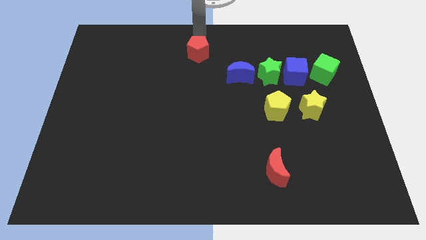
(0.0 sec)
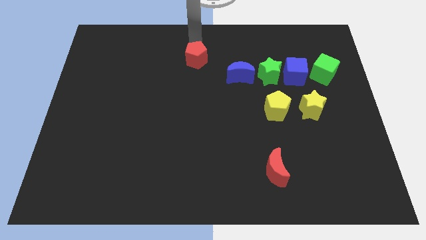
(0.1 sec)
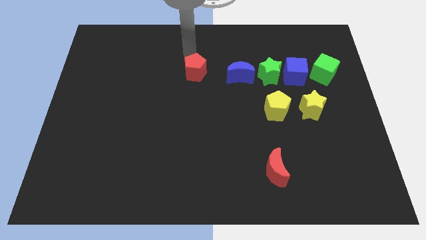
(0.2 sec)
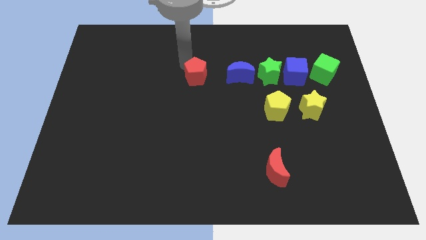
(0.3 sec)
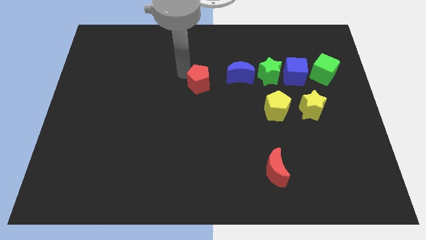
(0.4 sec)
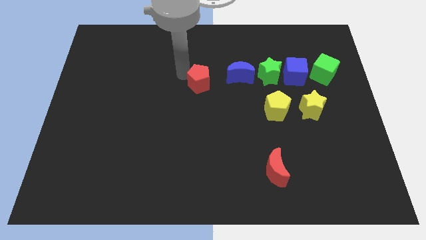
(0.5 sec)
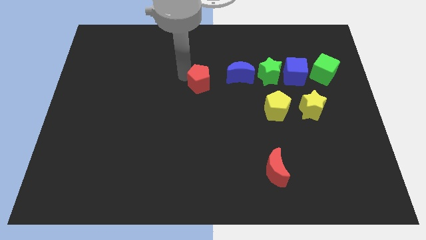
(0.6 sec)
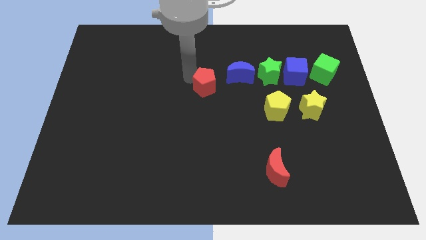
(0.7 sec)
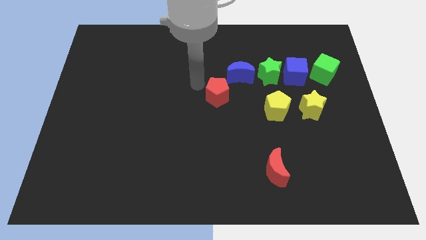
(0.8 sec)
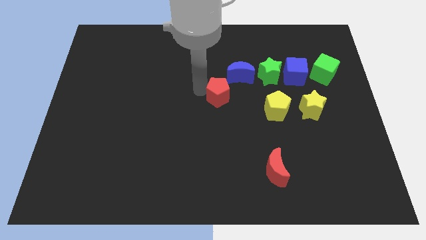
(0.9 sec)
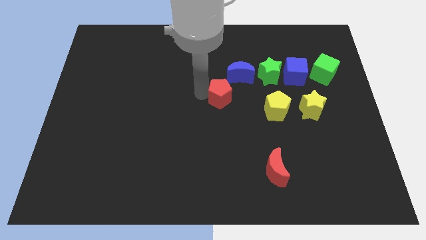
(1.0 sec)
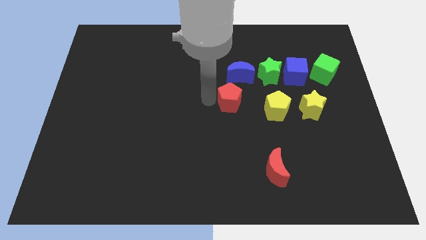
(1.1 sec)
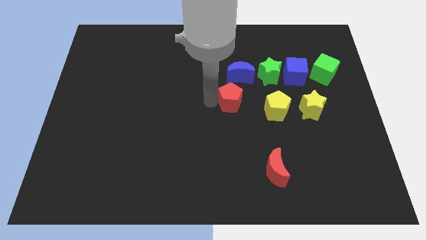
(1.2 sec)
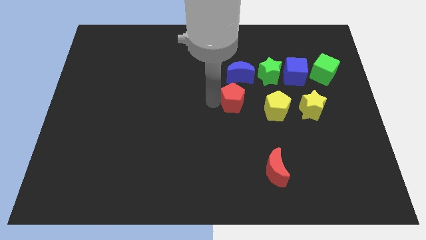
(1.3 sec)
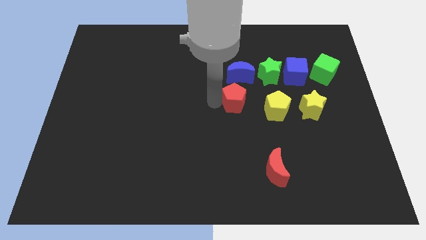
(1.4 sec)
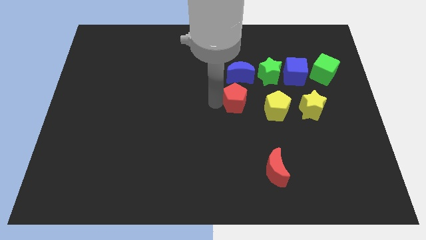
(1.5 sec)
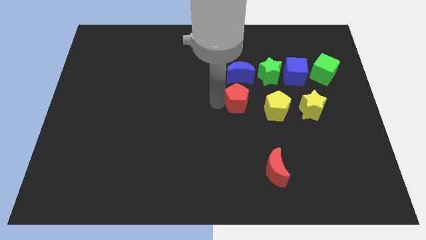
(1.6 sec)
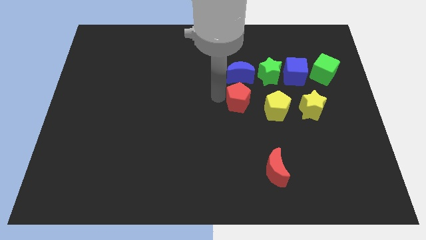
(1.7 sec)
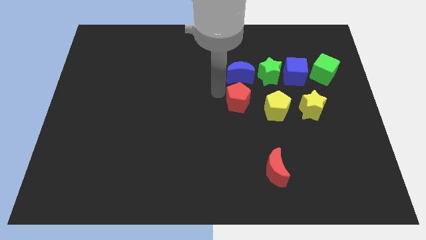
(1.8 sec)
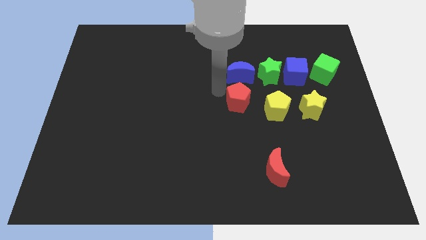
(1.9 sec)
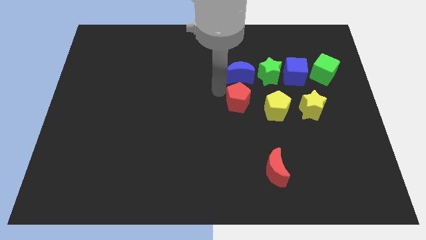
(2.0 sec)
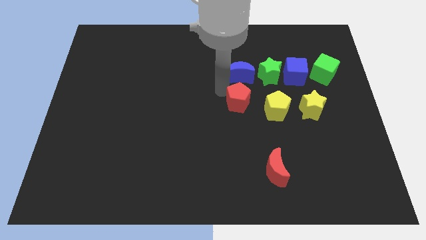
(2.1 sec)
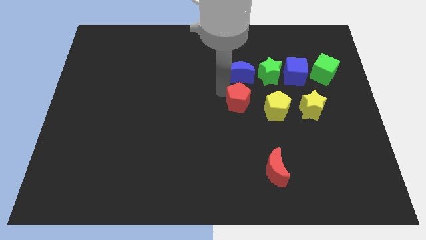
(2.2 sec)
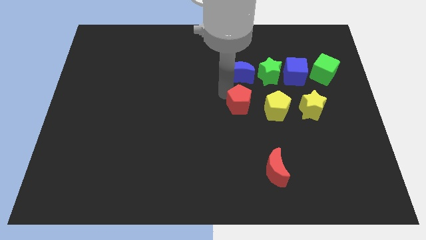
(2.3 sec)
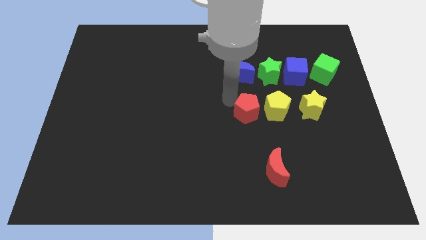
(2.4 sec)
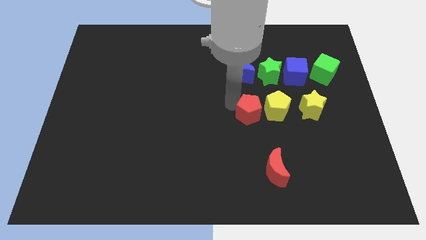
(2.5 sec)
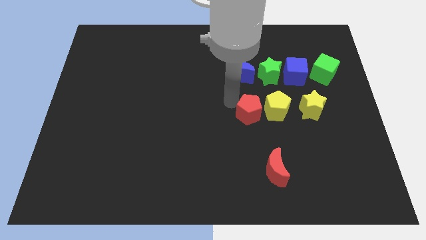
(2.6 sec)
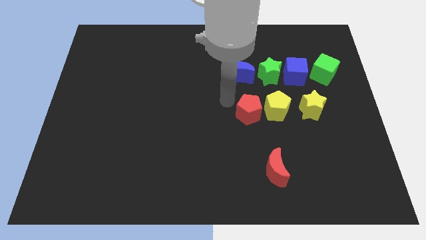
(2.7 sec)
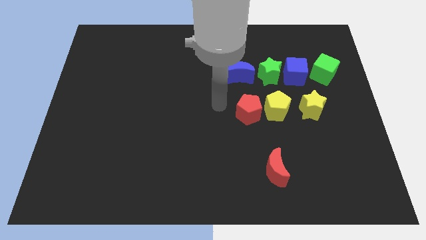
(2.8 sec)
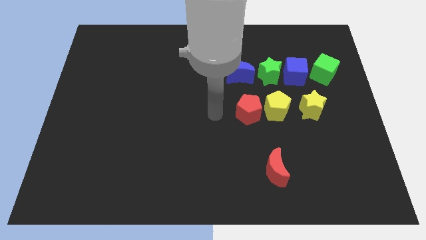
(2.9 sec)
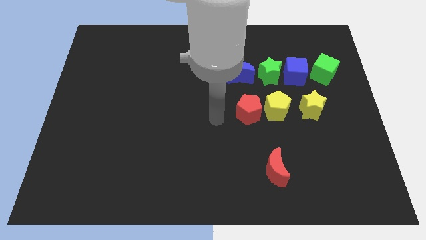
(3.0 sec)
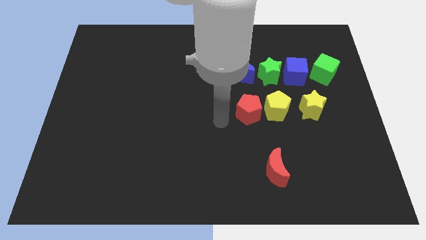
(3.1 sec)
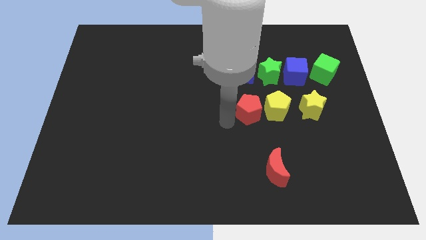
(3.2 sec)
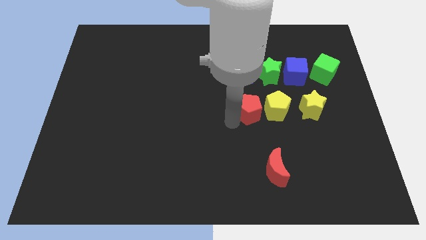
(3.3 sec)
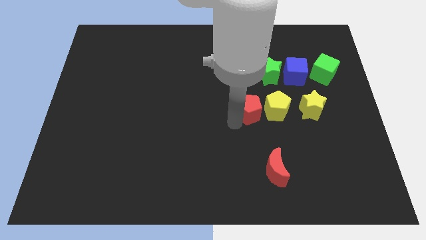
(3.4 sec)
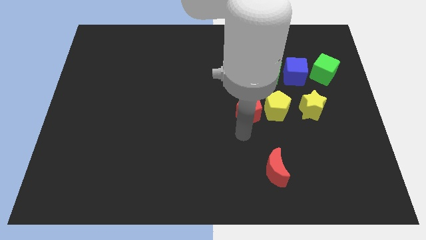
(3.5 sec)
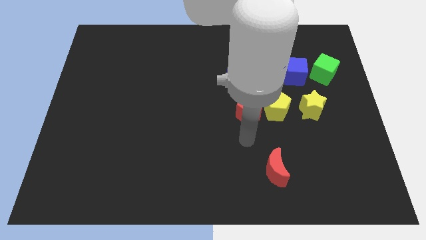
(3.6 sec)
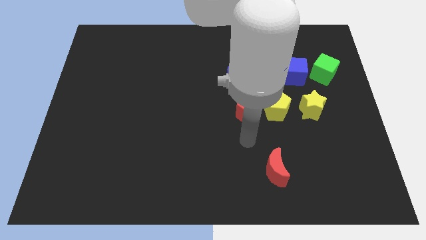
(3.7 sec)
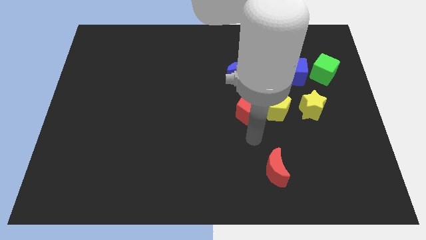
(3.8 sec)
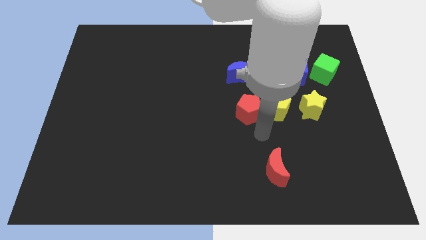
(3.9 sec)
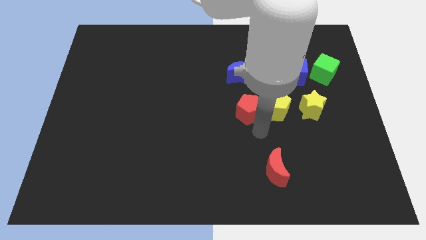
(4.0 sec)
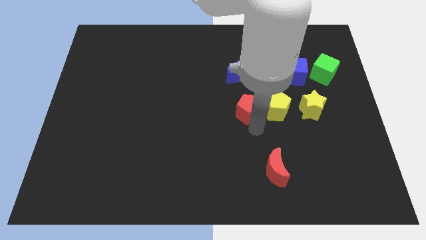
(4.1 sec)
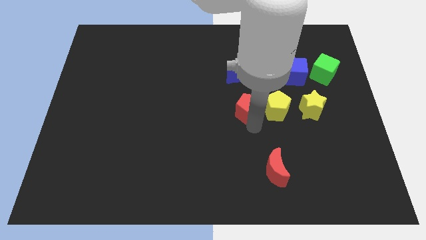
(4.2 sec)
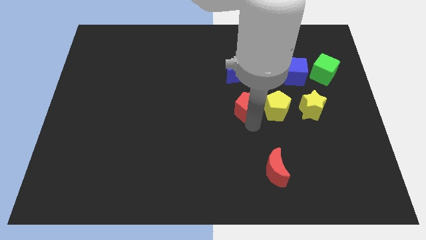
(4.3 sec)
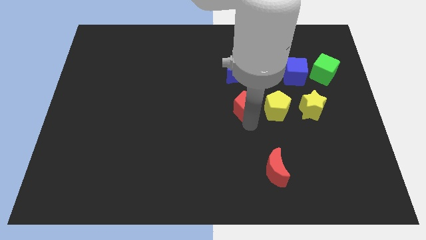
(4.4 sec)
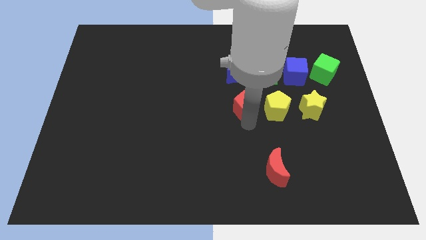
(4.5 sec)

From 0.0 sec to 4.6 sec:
push red pentagon vertically below blue crescent

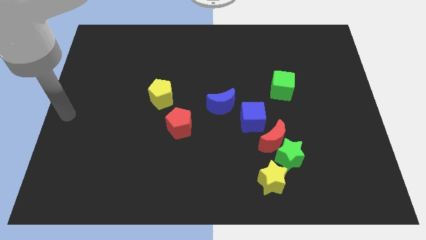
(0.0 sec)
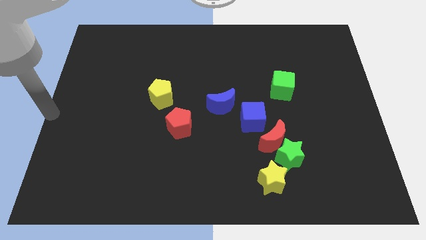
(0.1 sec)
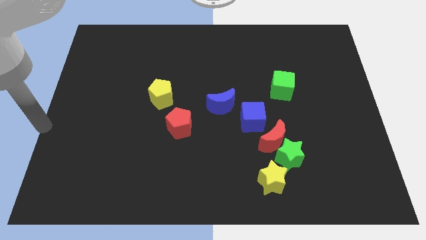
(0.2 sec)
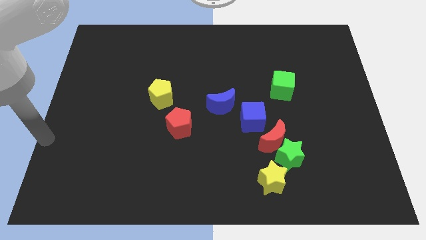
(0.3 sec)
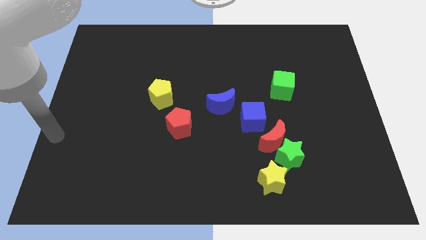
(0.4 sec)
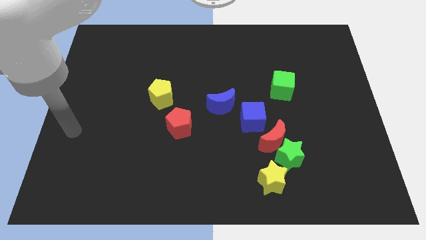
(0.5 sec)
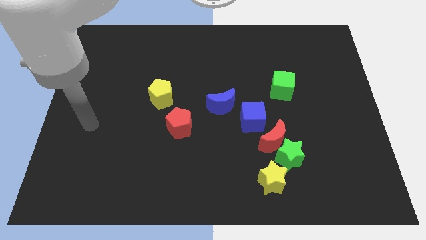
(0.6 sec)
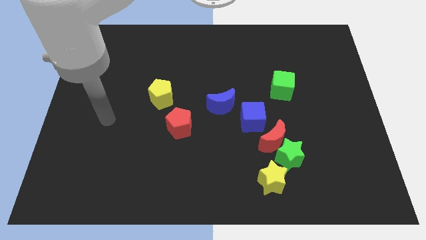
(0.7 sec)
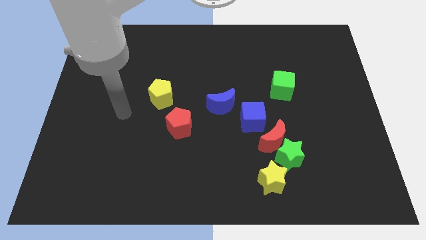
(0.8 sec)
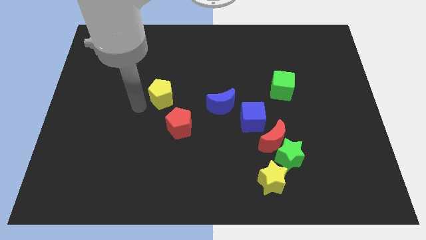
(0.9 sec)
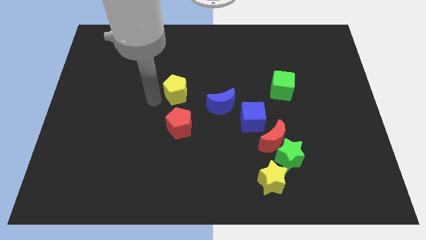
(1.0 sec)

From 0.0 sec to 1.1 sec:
point the arm to the left of the yellow pentagon

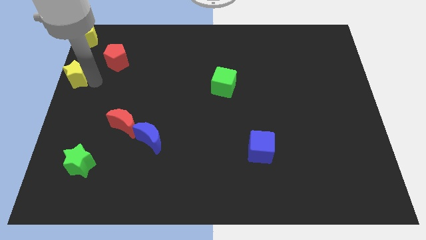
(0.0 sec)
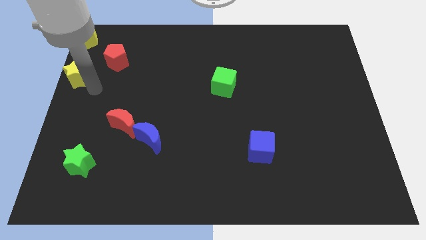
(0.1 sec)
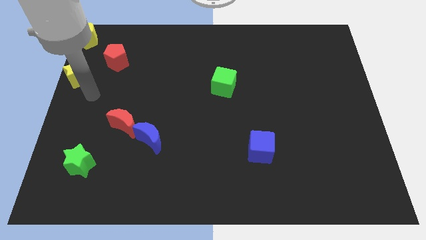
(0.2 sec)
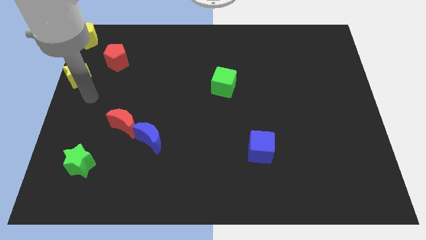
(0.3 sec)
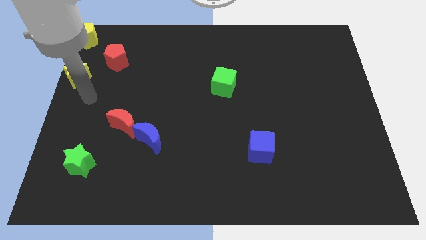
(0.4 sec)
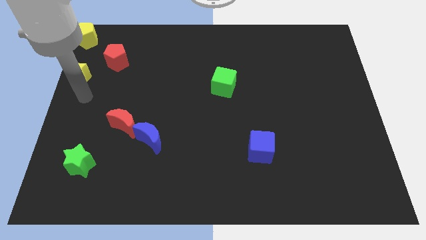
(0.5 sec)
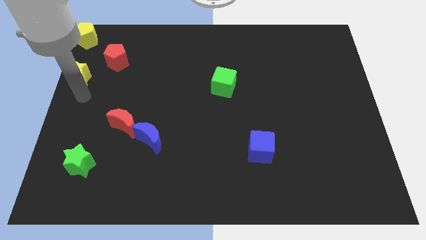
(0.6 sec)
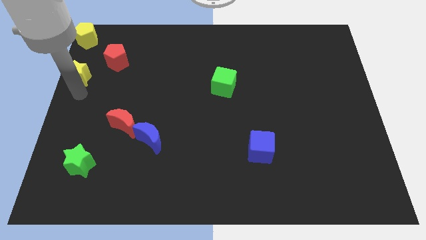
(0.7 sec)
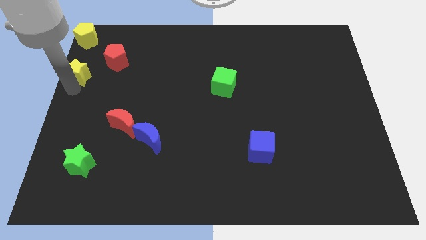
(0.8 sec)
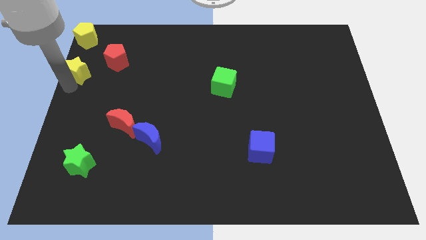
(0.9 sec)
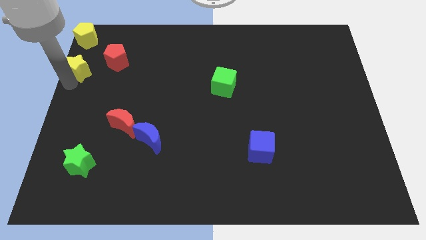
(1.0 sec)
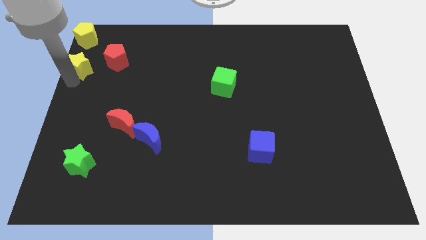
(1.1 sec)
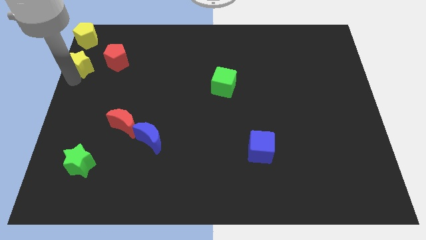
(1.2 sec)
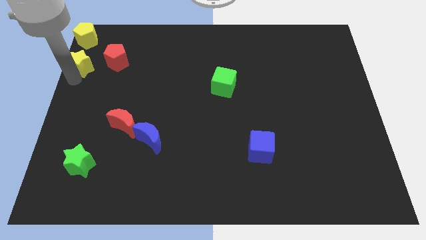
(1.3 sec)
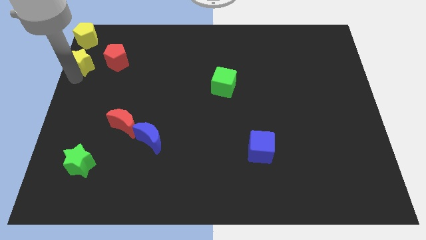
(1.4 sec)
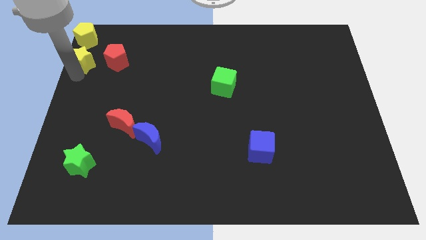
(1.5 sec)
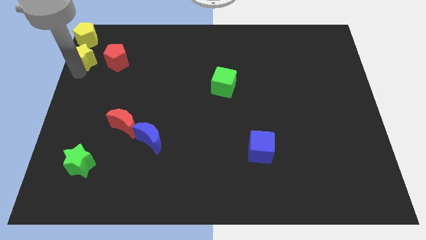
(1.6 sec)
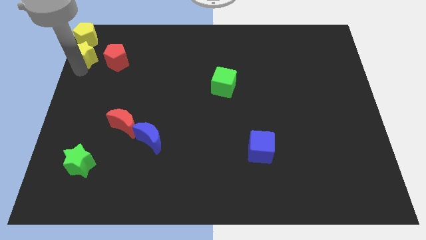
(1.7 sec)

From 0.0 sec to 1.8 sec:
put the yellow star underneath the yellow pentagon

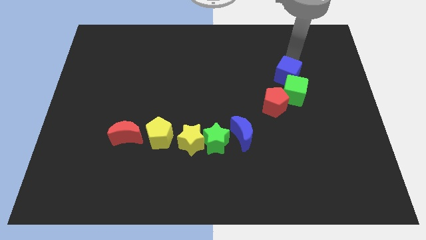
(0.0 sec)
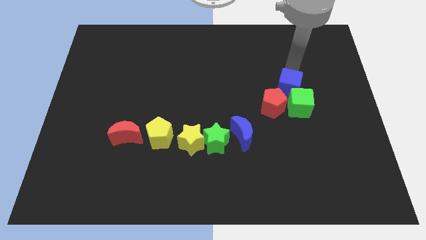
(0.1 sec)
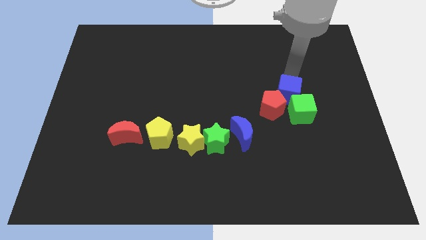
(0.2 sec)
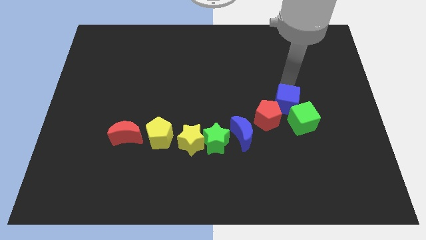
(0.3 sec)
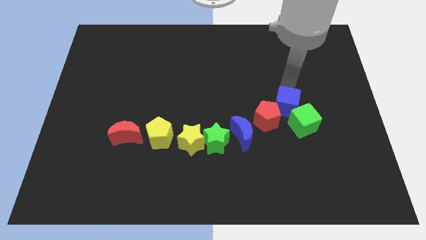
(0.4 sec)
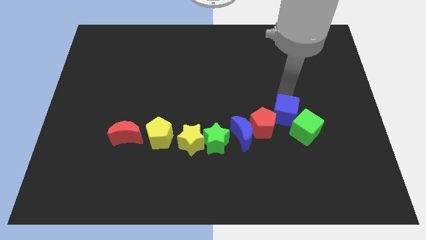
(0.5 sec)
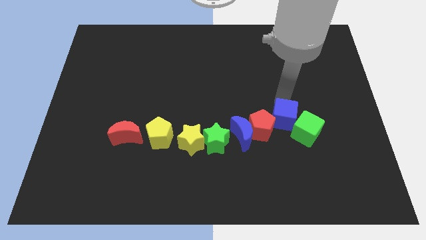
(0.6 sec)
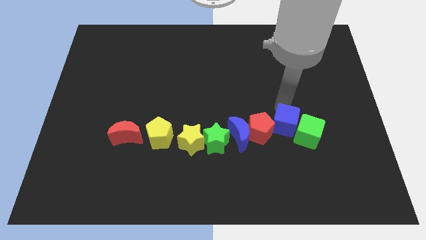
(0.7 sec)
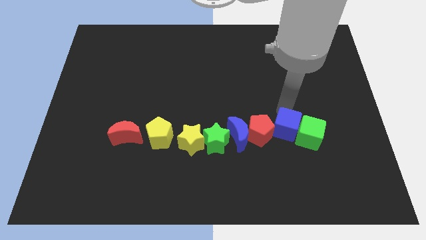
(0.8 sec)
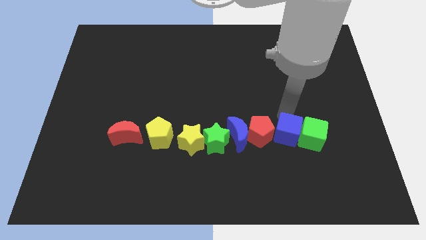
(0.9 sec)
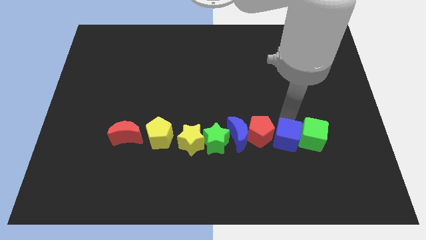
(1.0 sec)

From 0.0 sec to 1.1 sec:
push the blue cube to the right of the red pentagon

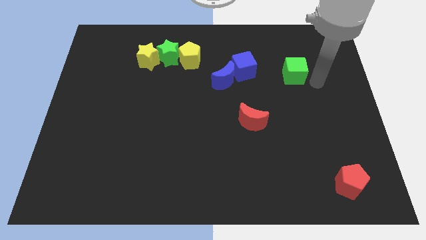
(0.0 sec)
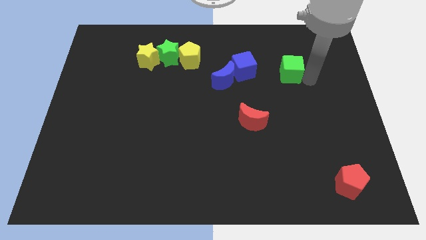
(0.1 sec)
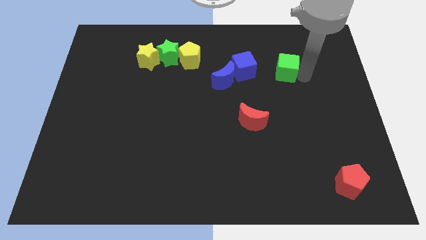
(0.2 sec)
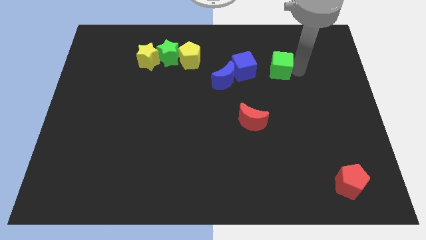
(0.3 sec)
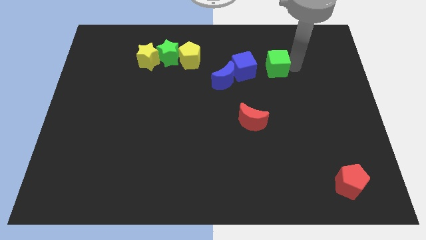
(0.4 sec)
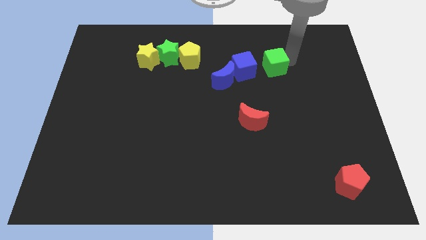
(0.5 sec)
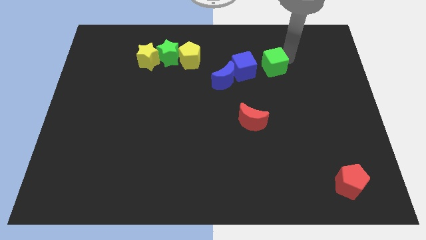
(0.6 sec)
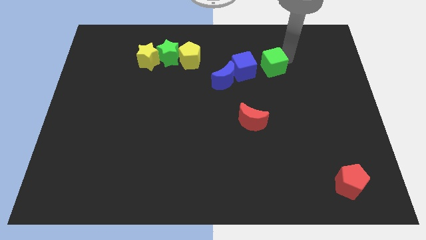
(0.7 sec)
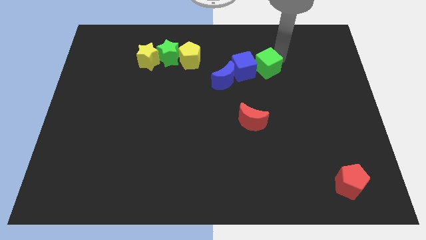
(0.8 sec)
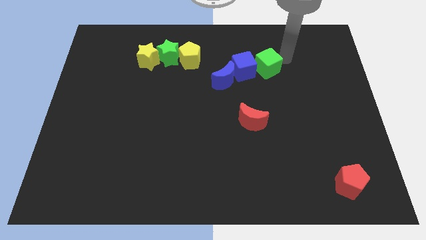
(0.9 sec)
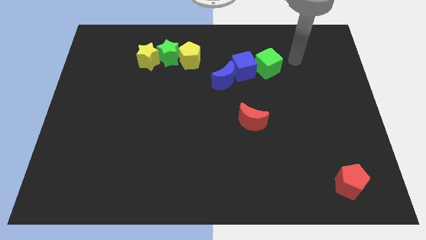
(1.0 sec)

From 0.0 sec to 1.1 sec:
take the green cube close to the blue cube
